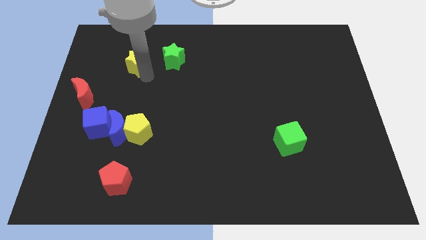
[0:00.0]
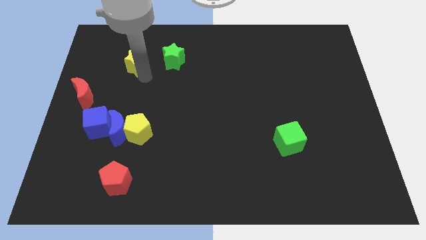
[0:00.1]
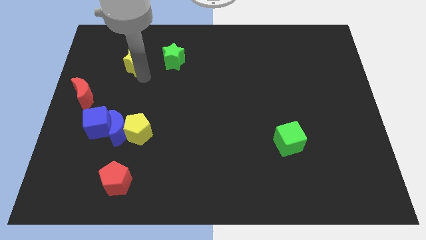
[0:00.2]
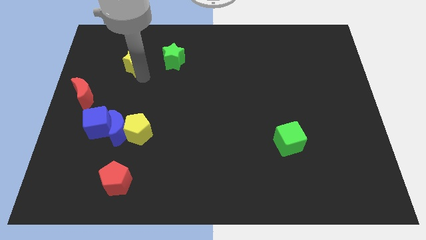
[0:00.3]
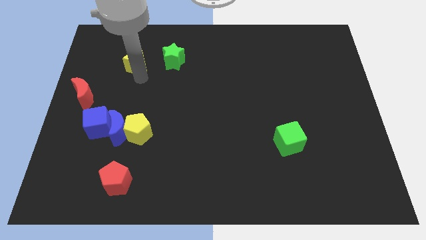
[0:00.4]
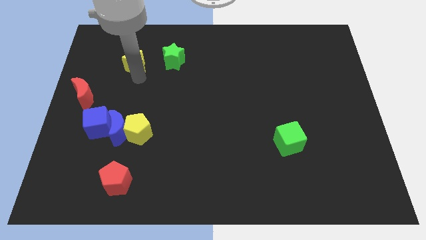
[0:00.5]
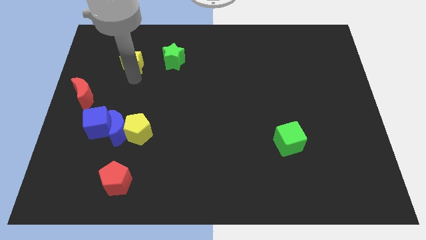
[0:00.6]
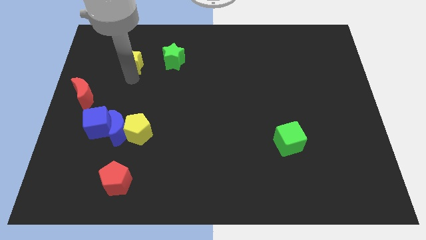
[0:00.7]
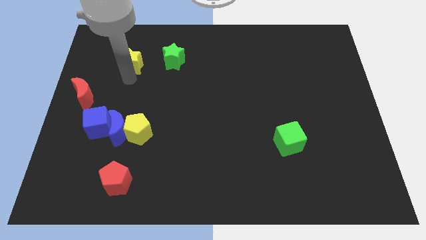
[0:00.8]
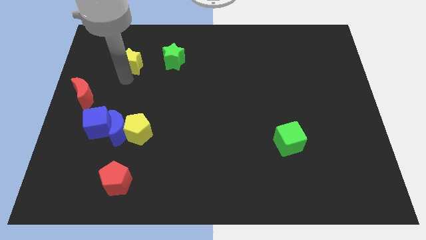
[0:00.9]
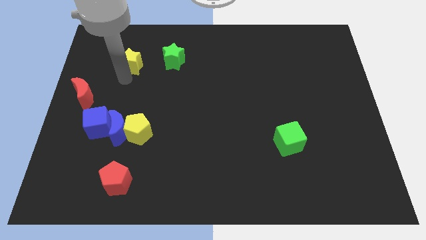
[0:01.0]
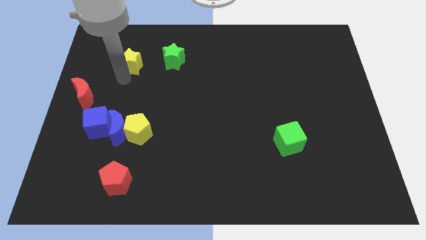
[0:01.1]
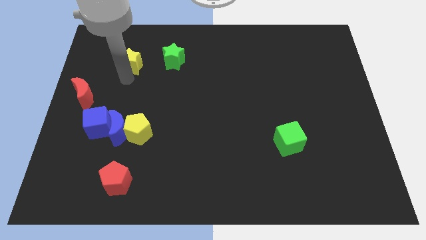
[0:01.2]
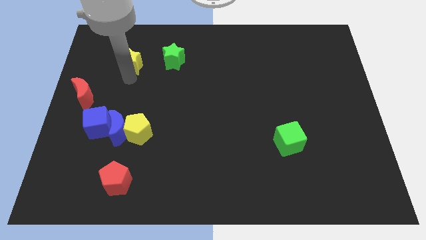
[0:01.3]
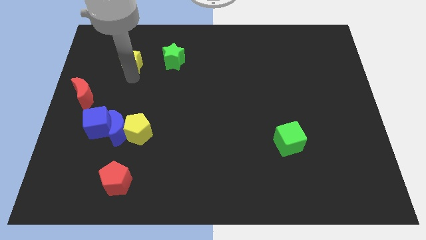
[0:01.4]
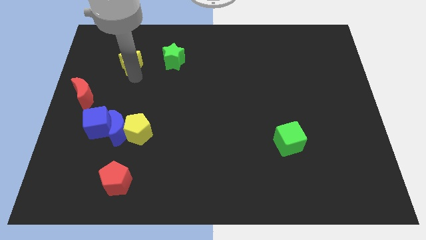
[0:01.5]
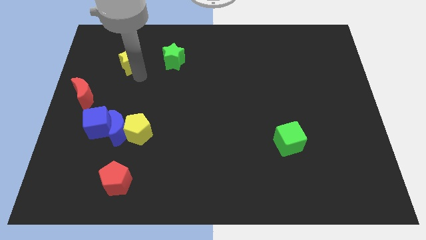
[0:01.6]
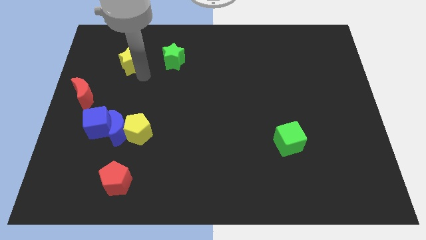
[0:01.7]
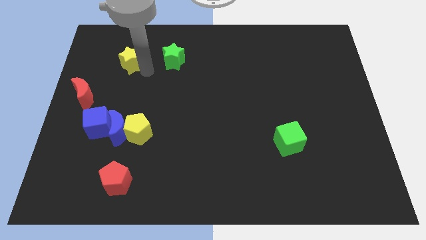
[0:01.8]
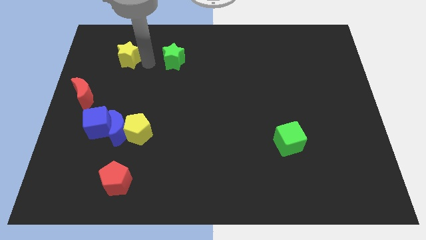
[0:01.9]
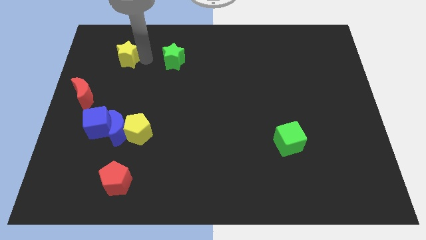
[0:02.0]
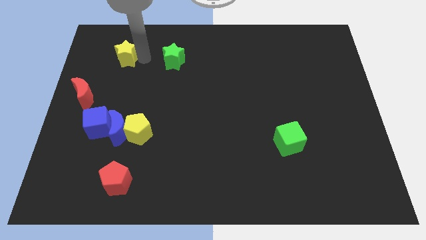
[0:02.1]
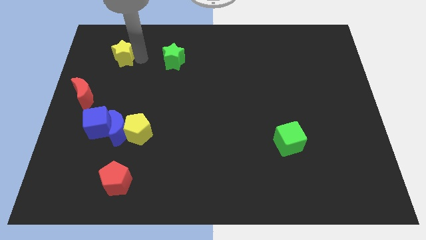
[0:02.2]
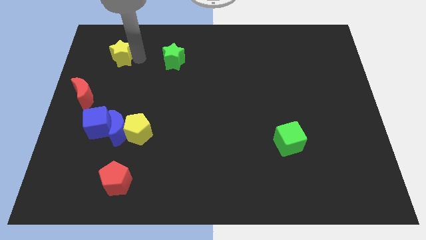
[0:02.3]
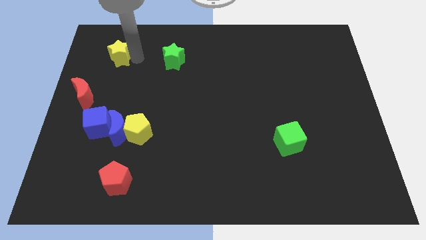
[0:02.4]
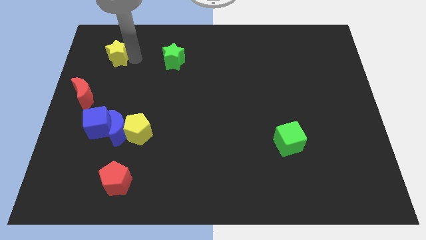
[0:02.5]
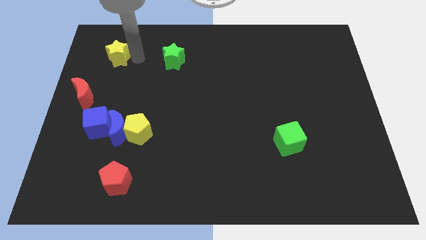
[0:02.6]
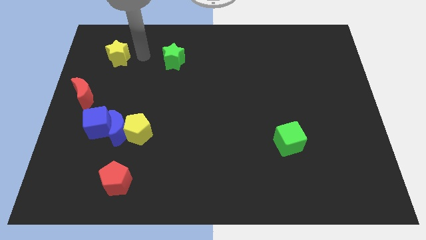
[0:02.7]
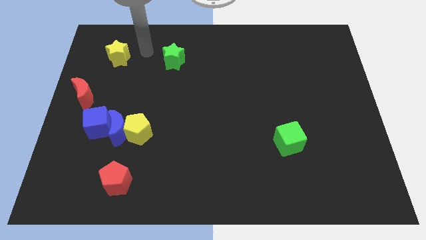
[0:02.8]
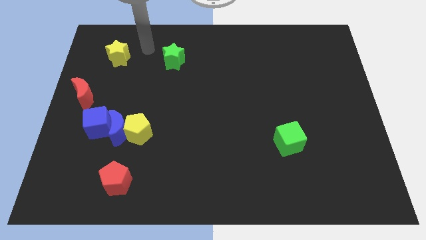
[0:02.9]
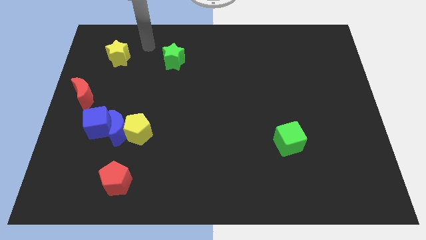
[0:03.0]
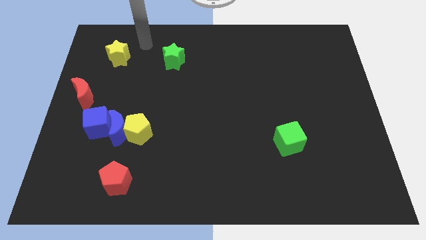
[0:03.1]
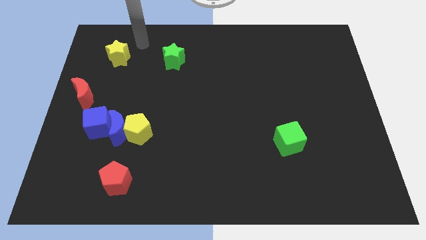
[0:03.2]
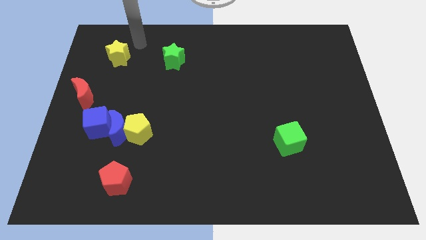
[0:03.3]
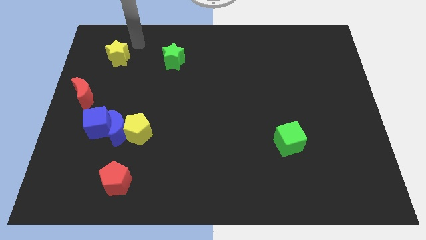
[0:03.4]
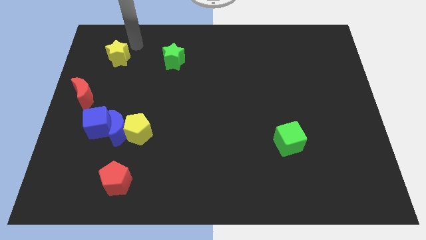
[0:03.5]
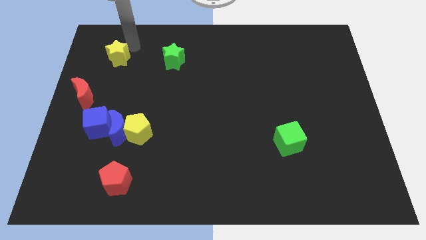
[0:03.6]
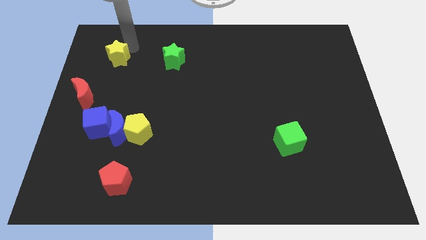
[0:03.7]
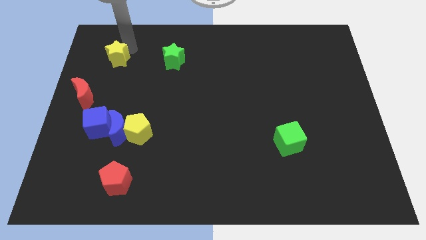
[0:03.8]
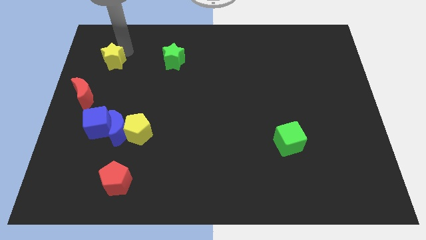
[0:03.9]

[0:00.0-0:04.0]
push the yellow star vertically above the blue blue moon

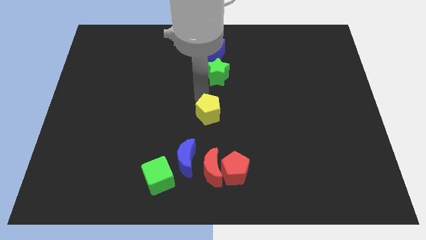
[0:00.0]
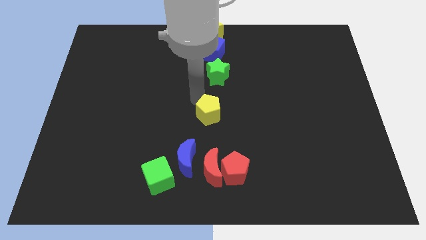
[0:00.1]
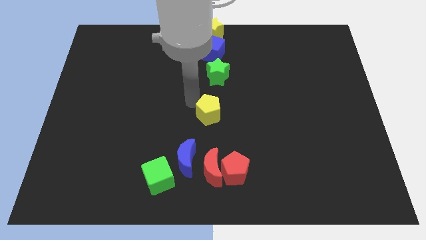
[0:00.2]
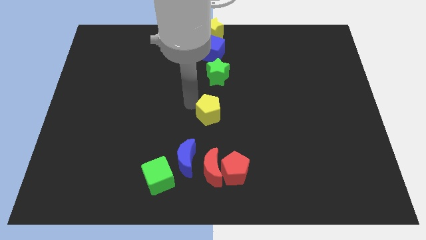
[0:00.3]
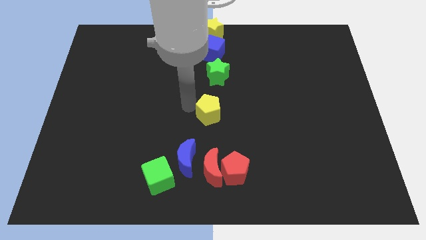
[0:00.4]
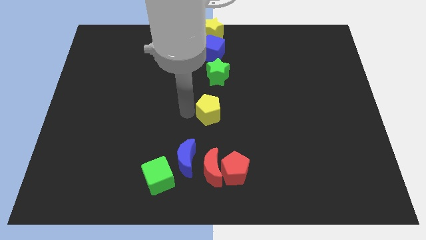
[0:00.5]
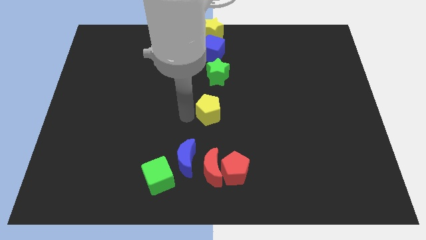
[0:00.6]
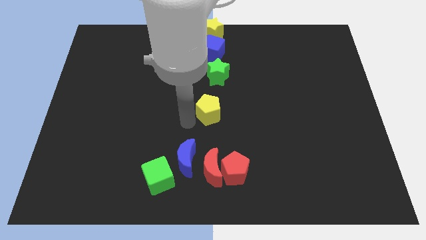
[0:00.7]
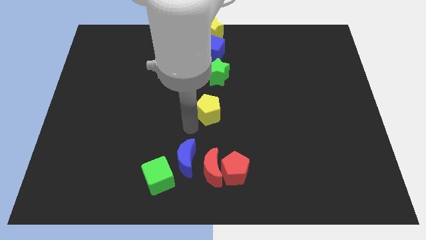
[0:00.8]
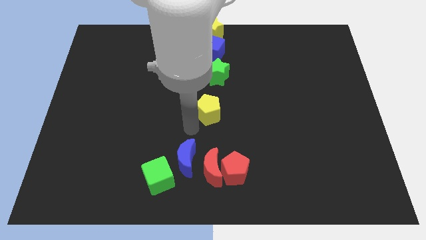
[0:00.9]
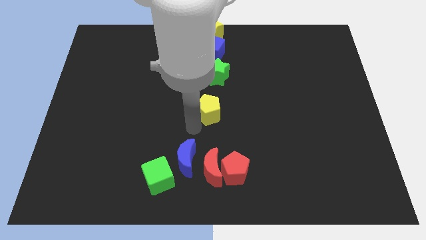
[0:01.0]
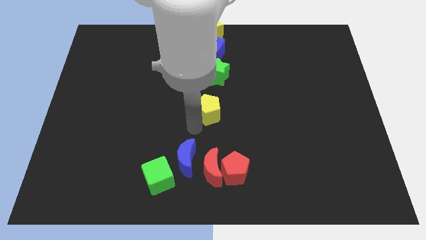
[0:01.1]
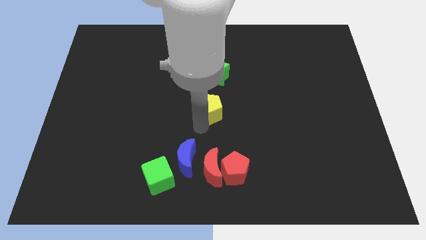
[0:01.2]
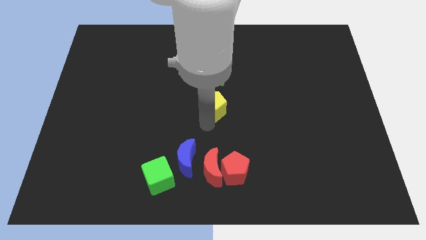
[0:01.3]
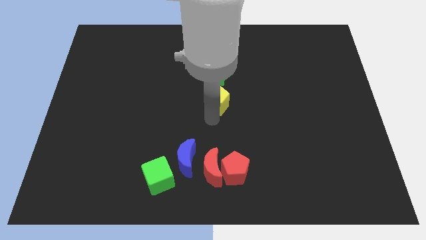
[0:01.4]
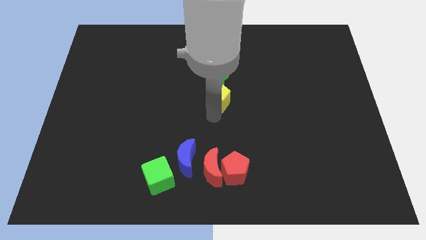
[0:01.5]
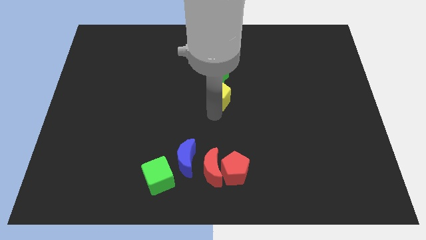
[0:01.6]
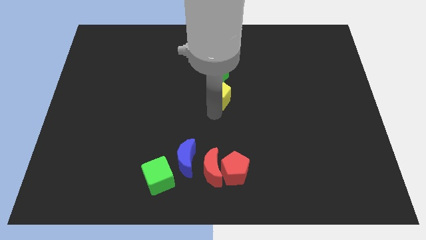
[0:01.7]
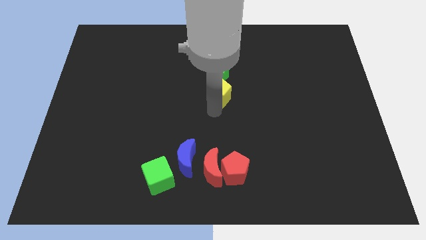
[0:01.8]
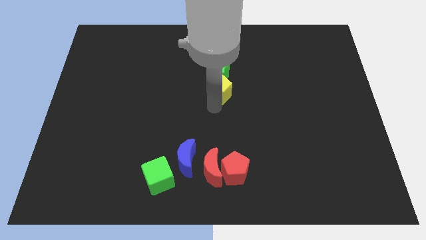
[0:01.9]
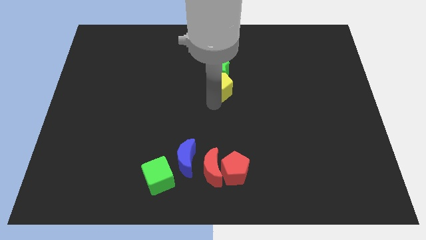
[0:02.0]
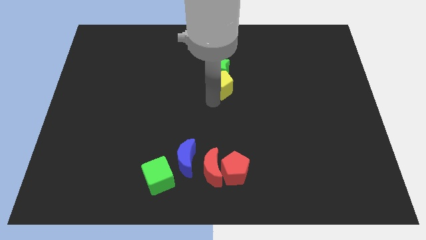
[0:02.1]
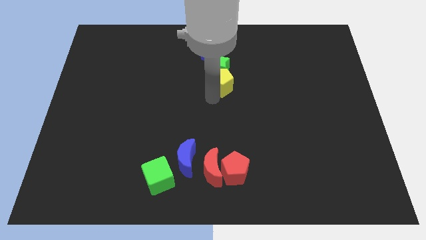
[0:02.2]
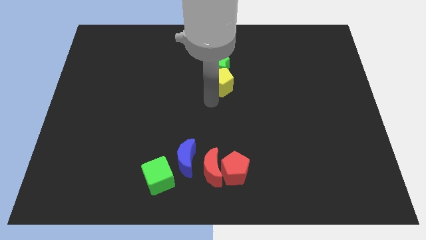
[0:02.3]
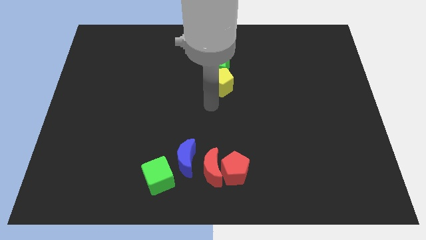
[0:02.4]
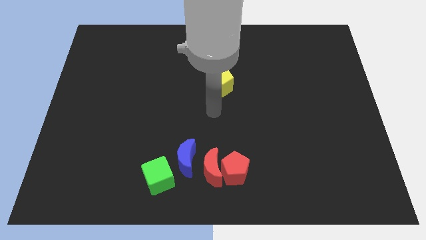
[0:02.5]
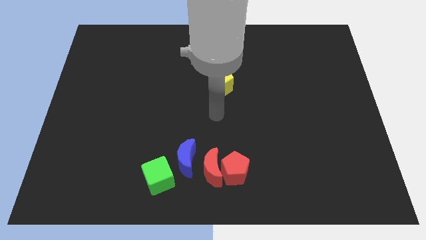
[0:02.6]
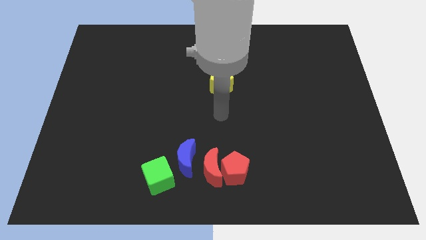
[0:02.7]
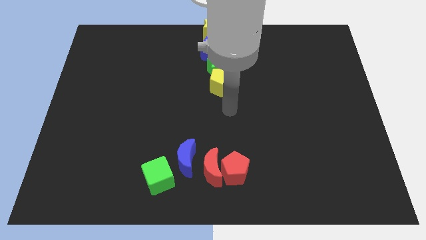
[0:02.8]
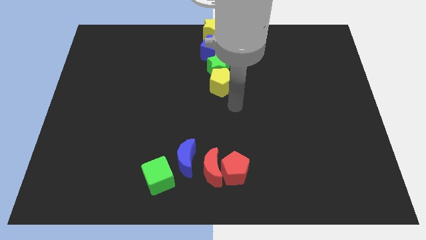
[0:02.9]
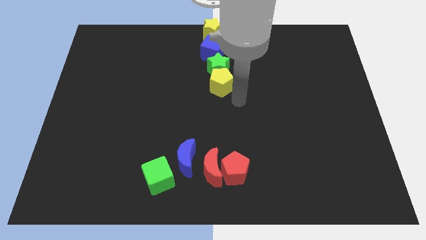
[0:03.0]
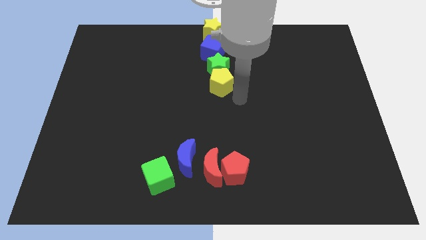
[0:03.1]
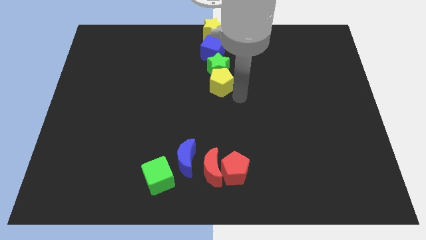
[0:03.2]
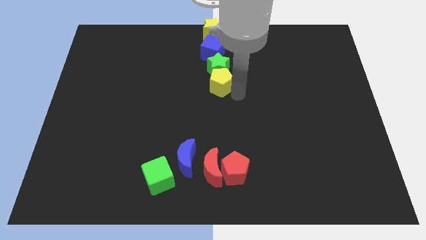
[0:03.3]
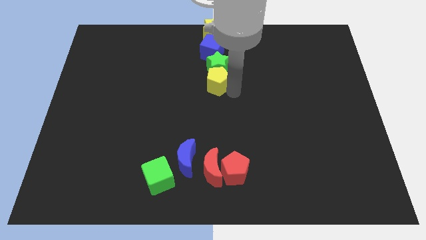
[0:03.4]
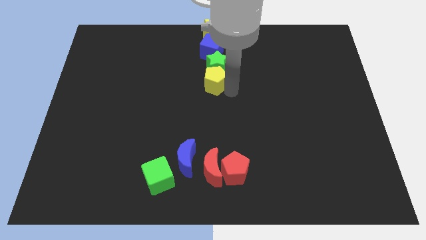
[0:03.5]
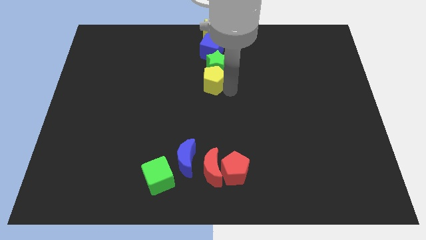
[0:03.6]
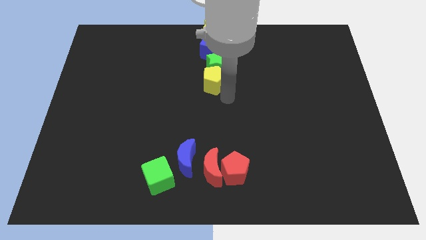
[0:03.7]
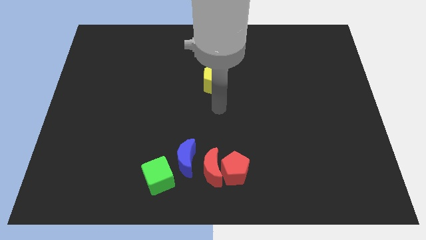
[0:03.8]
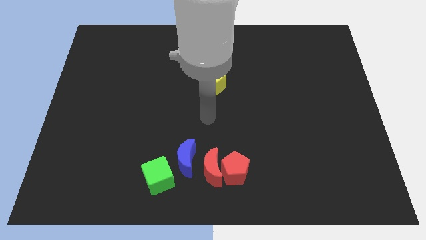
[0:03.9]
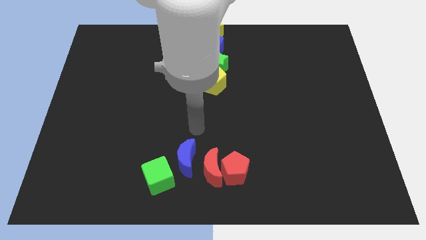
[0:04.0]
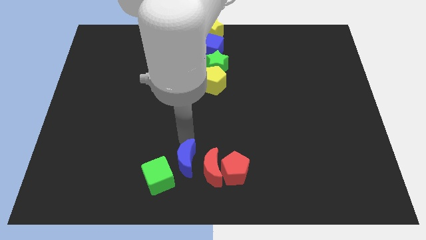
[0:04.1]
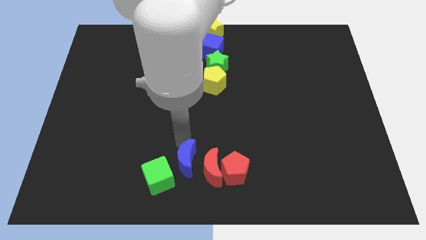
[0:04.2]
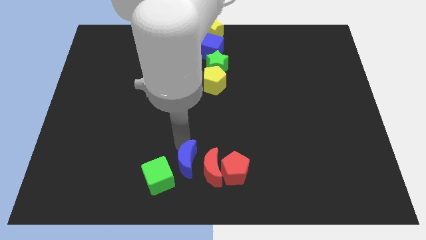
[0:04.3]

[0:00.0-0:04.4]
move the yellow pentagon into the green star

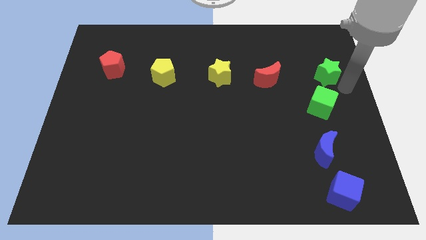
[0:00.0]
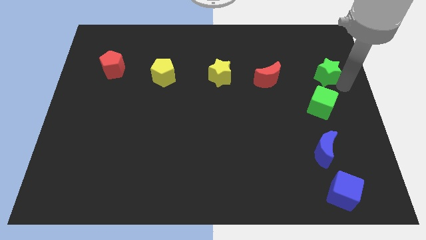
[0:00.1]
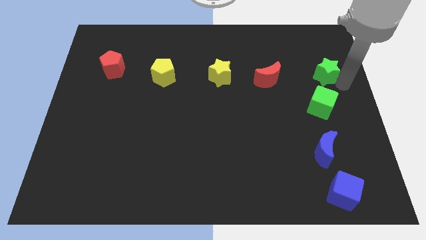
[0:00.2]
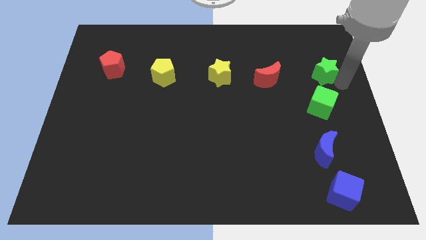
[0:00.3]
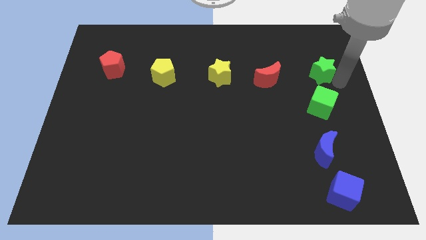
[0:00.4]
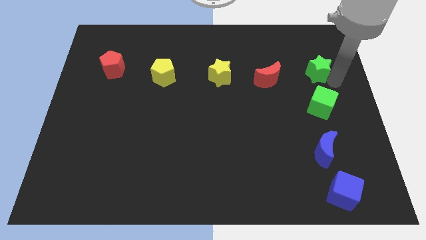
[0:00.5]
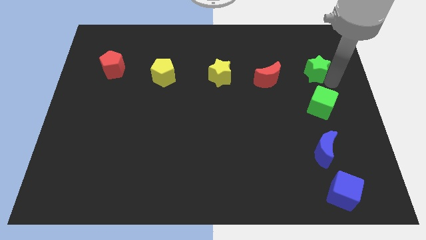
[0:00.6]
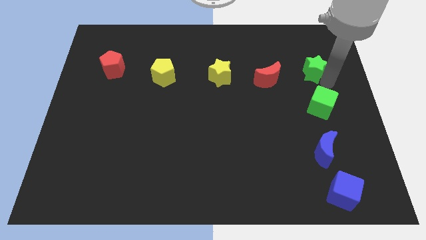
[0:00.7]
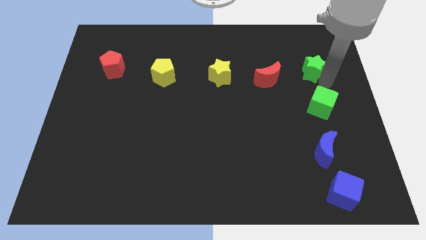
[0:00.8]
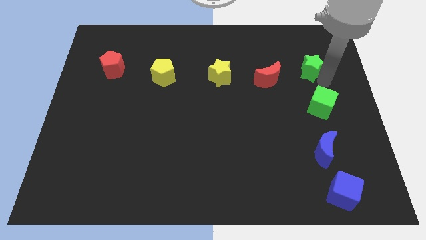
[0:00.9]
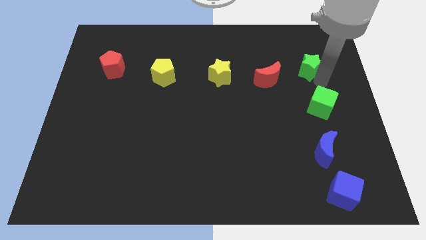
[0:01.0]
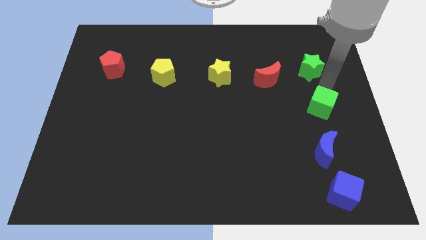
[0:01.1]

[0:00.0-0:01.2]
move the green star slightly to the left
